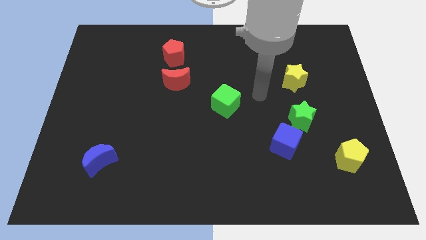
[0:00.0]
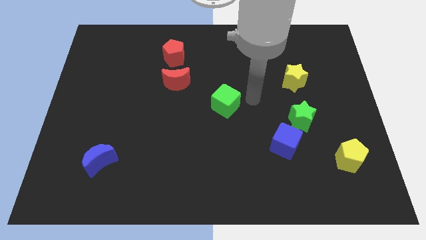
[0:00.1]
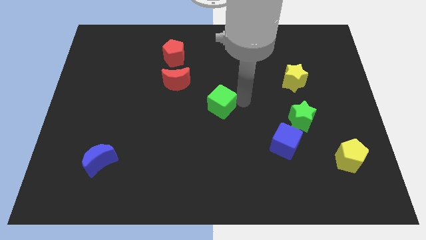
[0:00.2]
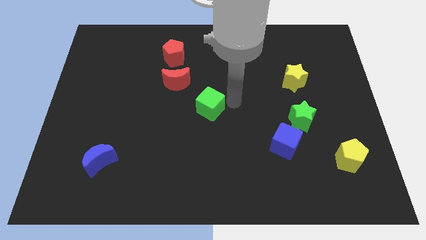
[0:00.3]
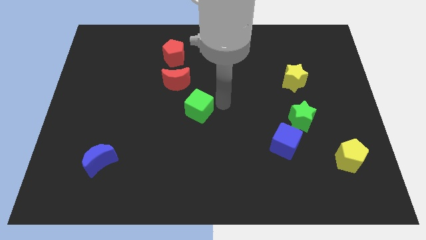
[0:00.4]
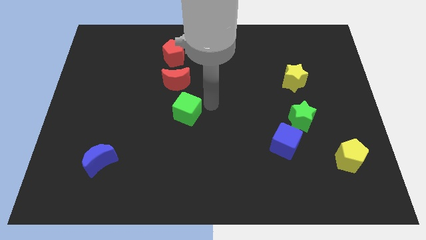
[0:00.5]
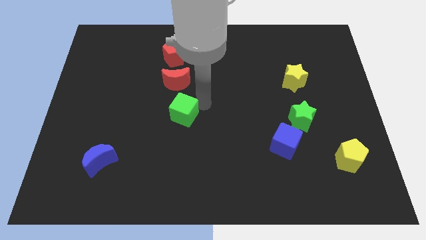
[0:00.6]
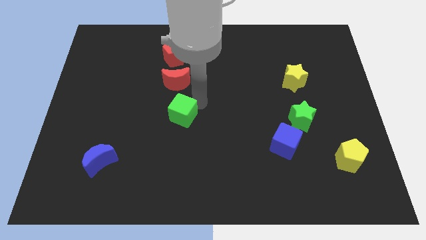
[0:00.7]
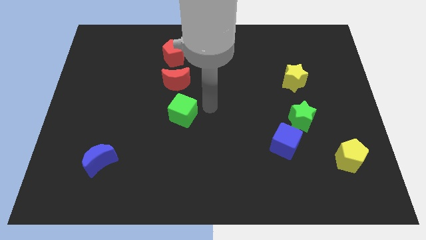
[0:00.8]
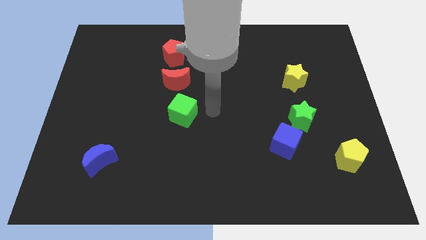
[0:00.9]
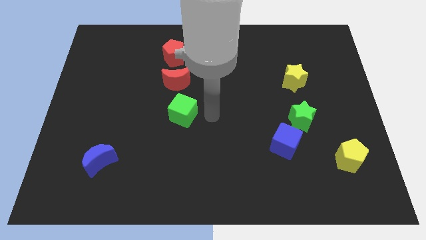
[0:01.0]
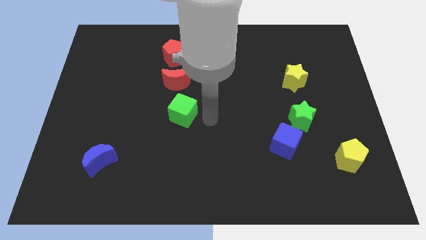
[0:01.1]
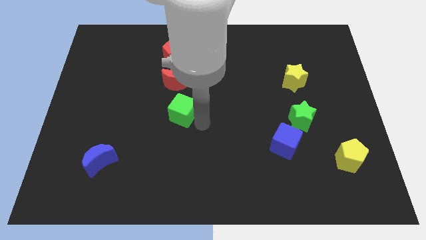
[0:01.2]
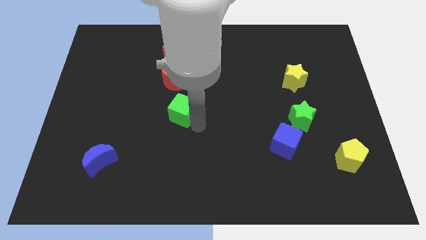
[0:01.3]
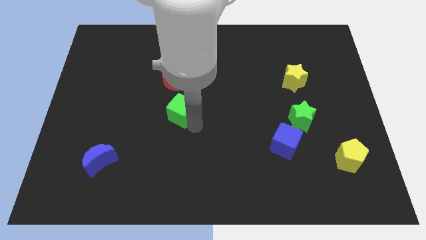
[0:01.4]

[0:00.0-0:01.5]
move green cube slightly to the left

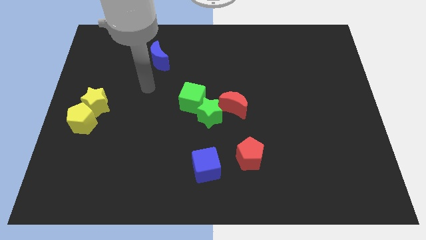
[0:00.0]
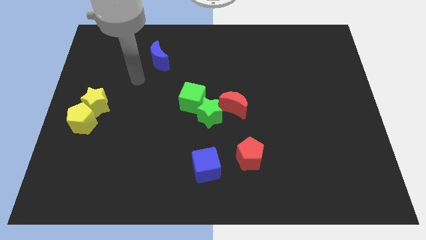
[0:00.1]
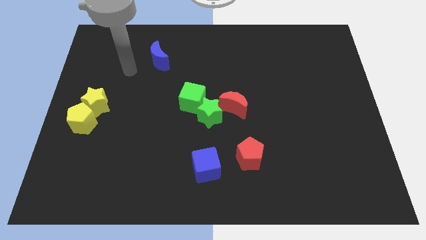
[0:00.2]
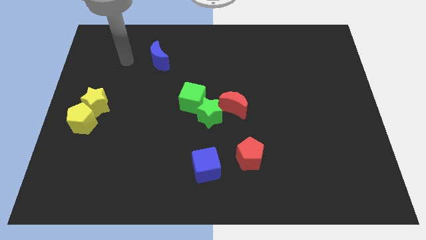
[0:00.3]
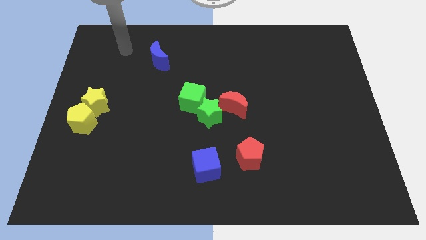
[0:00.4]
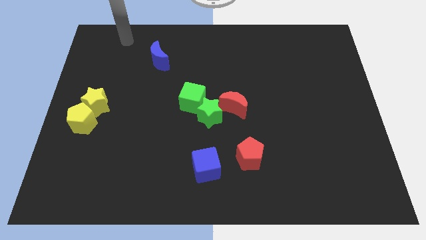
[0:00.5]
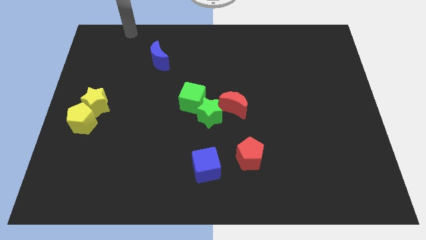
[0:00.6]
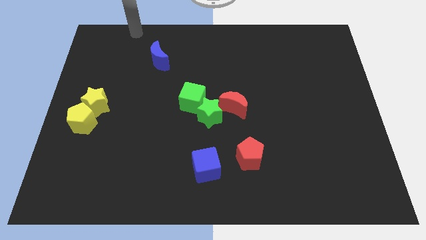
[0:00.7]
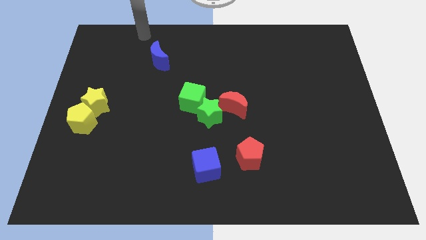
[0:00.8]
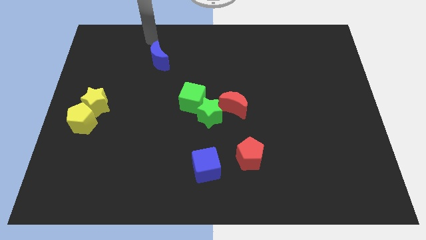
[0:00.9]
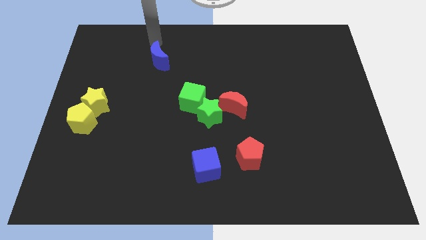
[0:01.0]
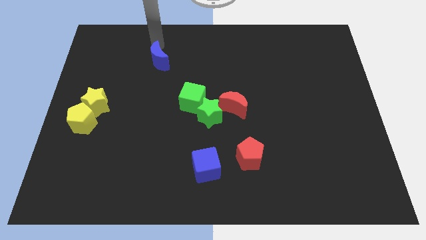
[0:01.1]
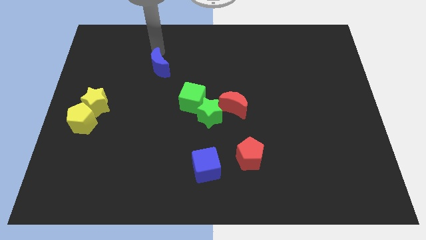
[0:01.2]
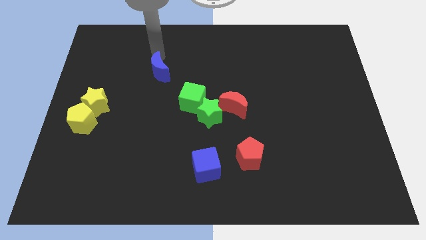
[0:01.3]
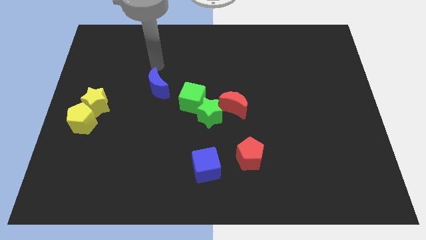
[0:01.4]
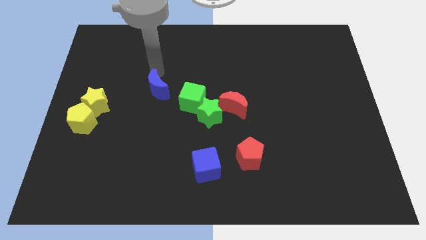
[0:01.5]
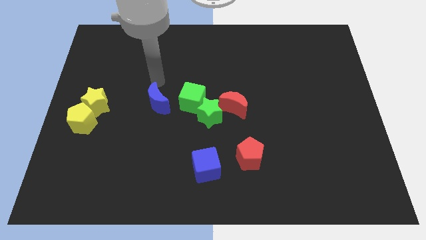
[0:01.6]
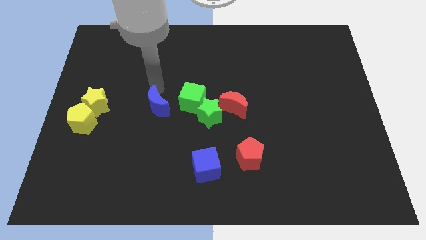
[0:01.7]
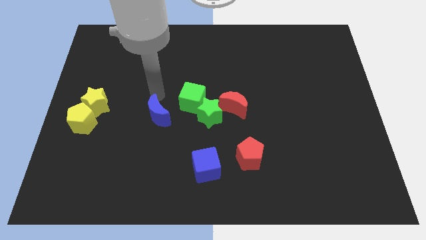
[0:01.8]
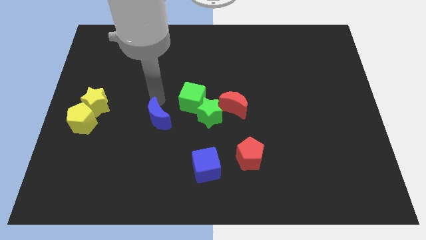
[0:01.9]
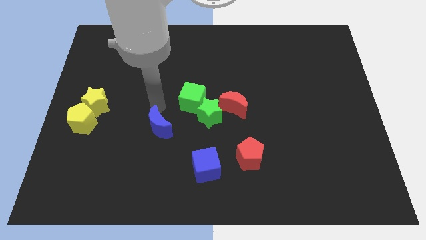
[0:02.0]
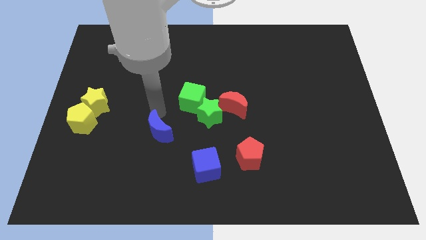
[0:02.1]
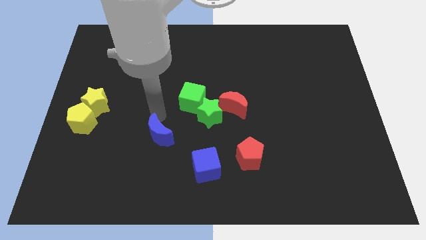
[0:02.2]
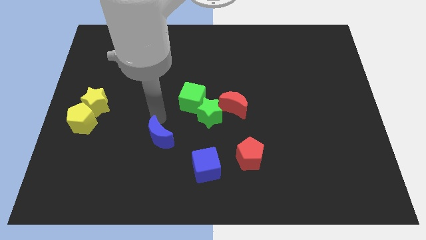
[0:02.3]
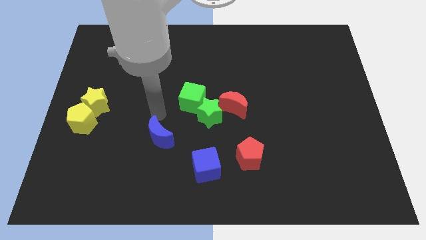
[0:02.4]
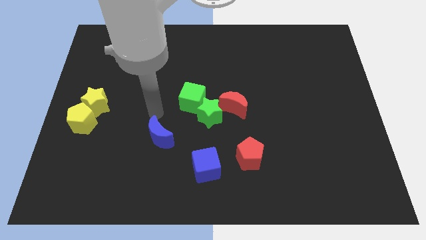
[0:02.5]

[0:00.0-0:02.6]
push the blue moon towards the bottom side of the board

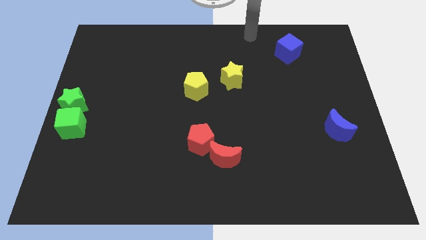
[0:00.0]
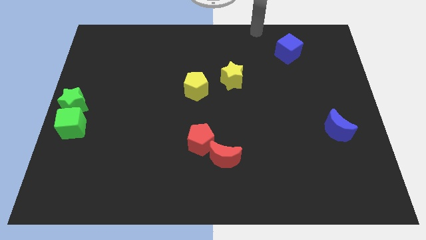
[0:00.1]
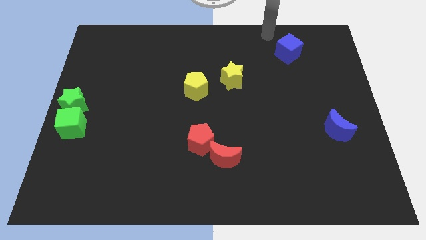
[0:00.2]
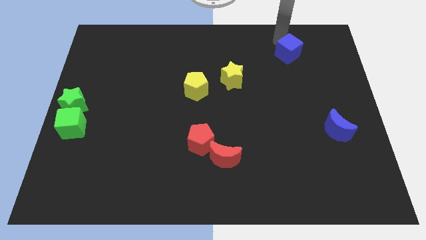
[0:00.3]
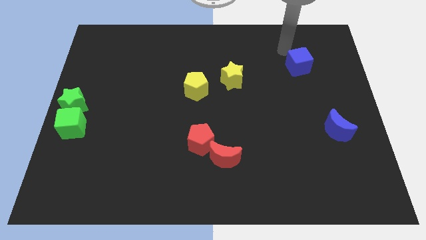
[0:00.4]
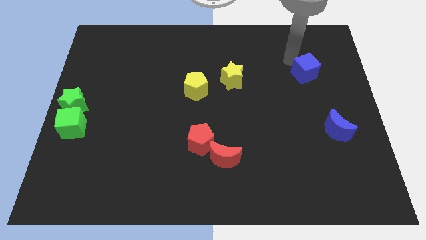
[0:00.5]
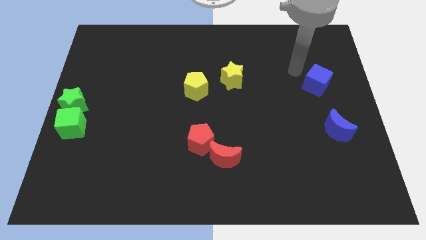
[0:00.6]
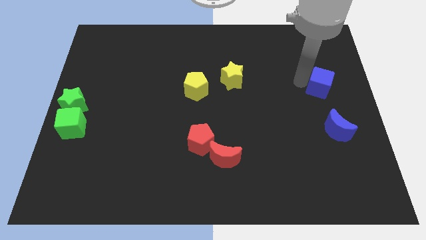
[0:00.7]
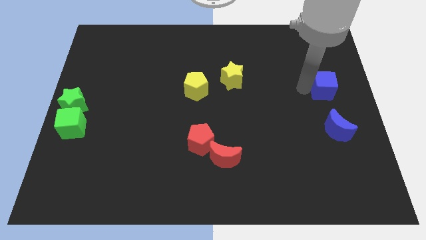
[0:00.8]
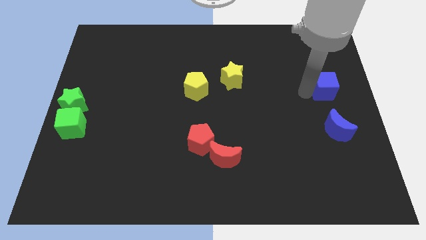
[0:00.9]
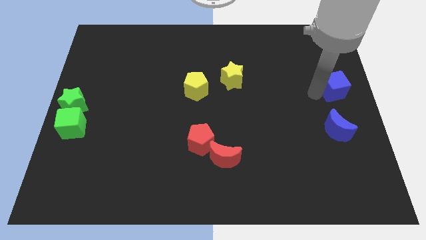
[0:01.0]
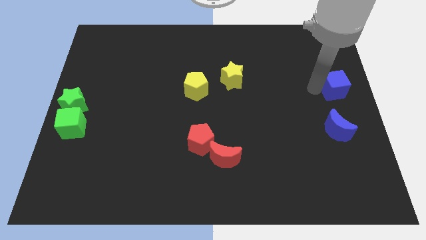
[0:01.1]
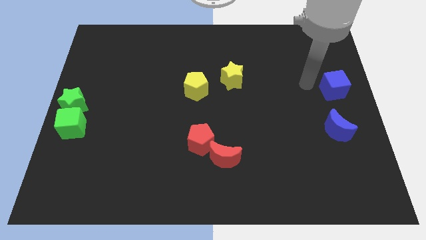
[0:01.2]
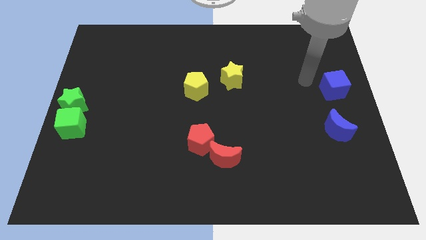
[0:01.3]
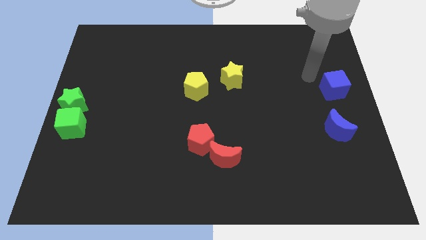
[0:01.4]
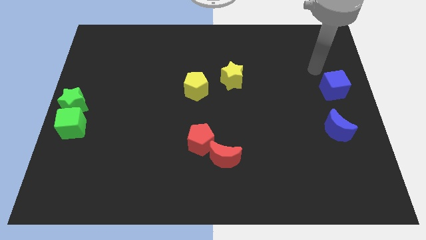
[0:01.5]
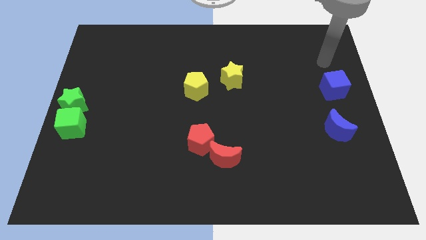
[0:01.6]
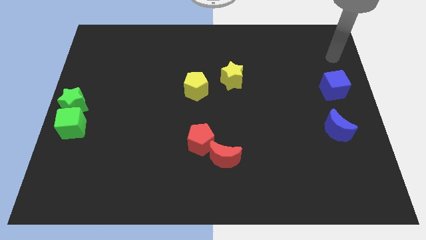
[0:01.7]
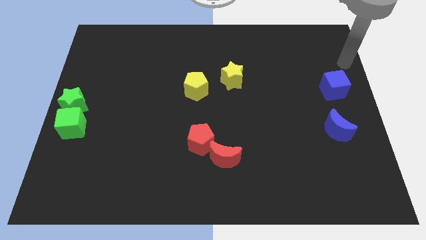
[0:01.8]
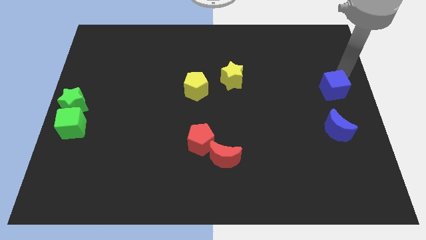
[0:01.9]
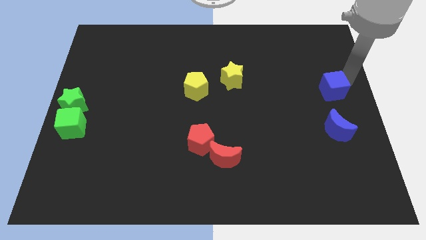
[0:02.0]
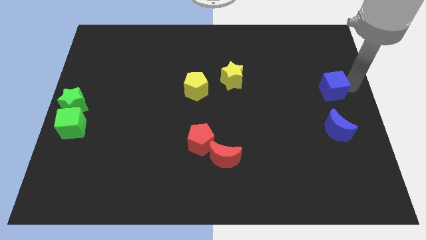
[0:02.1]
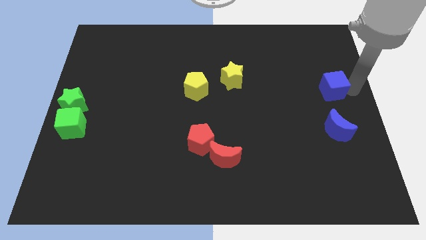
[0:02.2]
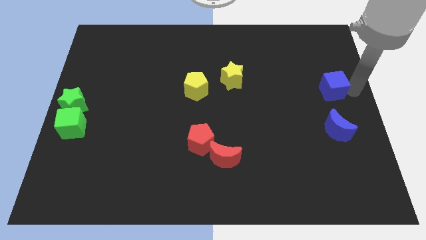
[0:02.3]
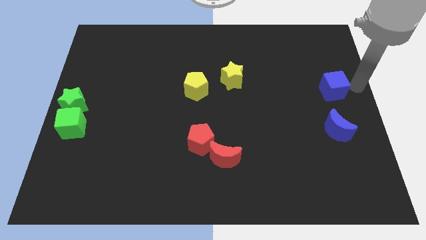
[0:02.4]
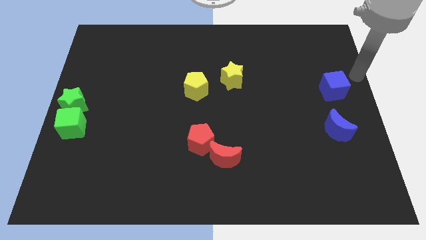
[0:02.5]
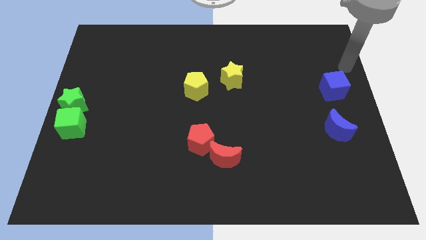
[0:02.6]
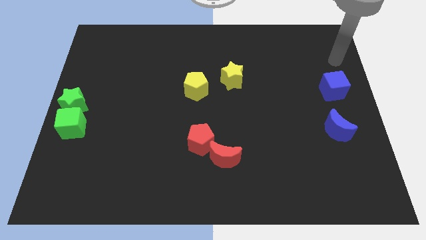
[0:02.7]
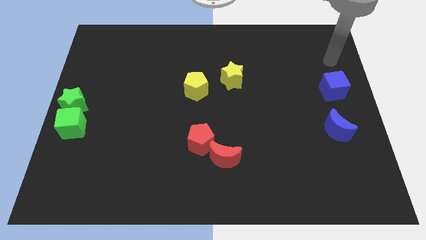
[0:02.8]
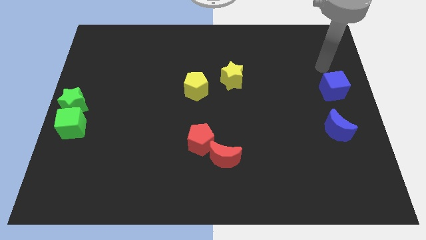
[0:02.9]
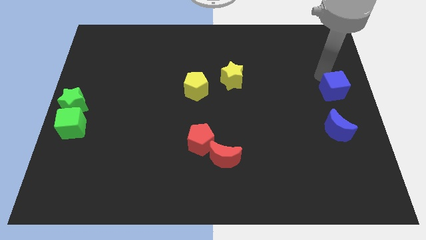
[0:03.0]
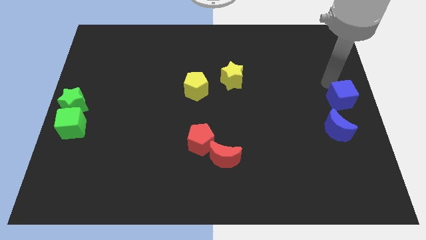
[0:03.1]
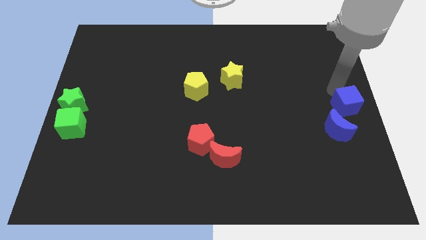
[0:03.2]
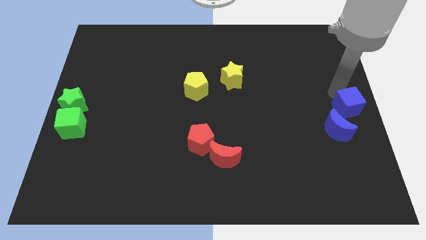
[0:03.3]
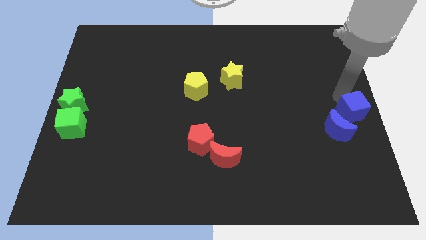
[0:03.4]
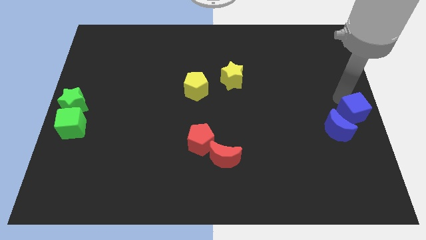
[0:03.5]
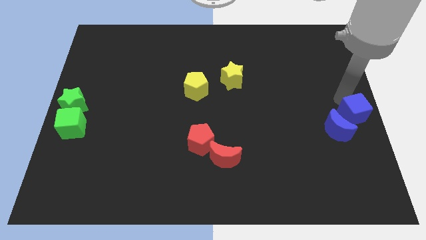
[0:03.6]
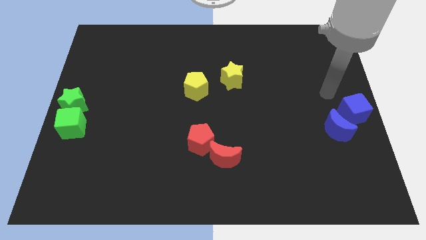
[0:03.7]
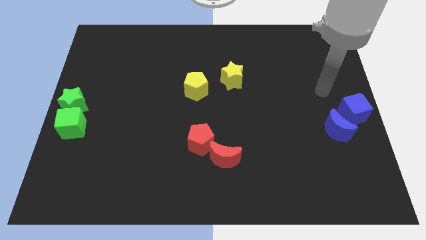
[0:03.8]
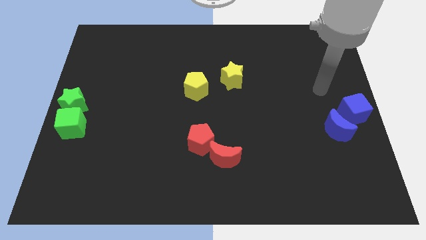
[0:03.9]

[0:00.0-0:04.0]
move the blue cube to the center right of the board

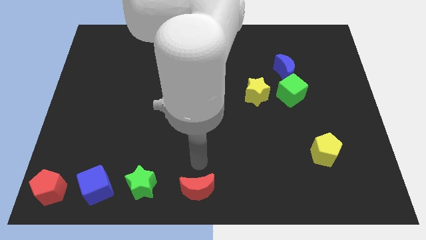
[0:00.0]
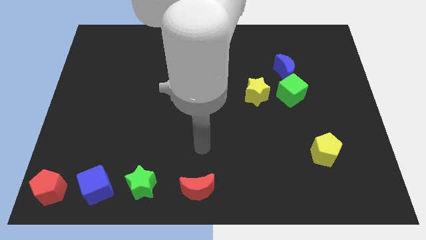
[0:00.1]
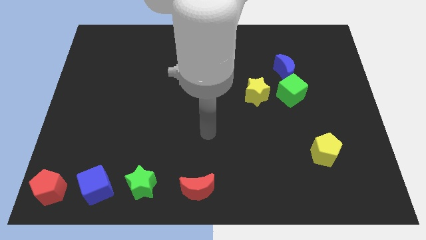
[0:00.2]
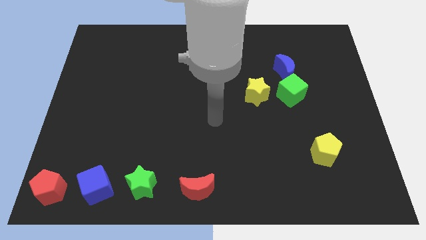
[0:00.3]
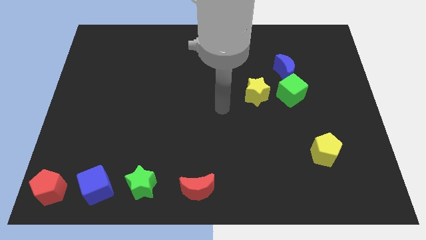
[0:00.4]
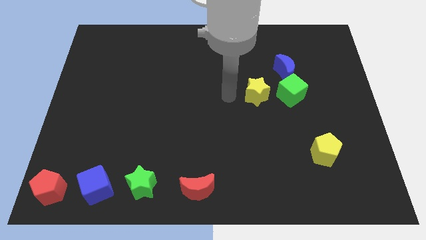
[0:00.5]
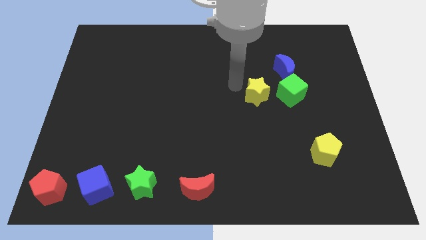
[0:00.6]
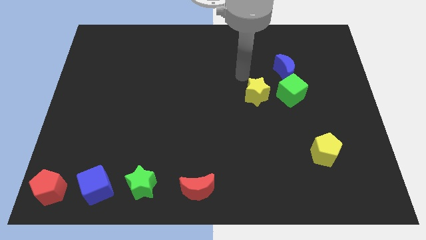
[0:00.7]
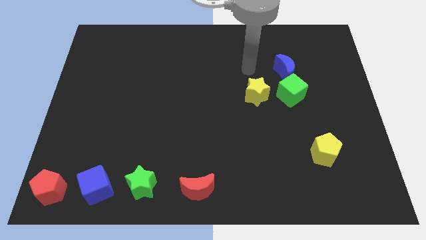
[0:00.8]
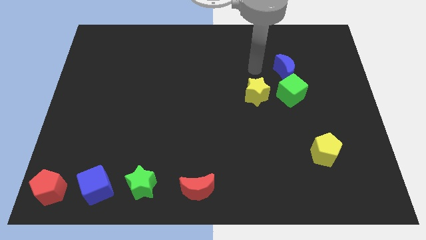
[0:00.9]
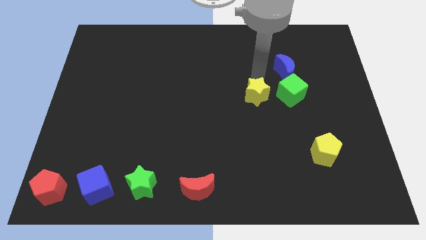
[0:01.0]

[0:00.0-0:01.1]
point your arm at the top of yellow star
